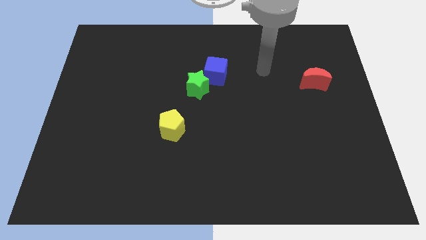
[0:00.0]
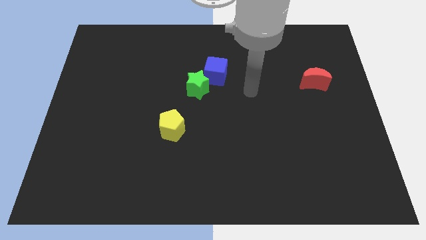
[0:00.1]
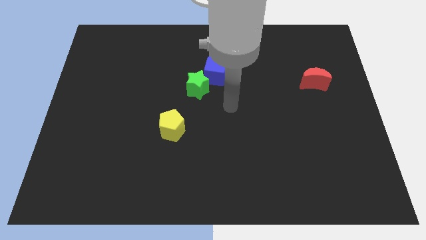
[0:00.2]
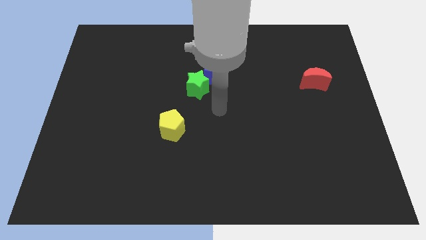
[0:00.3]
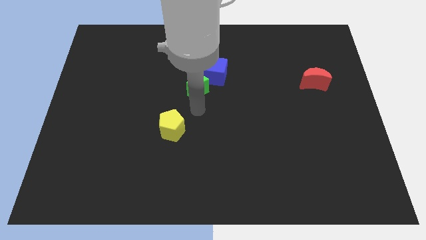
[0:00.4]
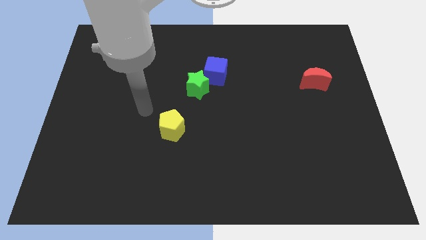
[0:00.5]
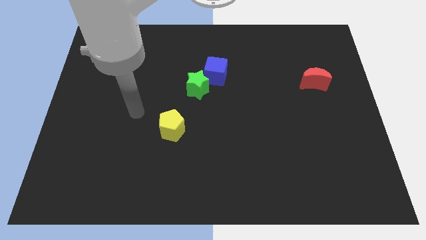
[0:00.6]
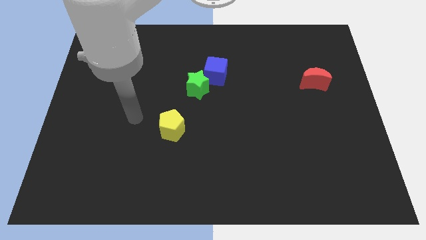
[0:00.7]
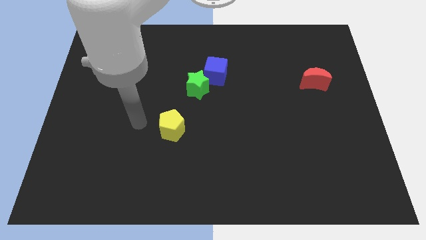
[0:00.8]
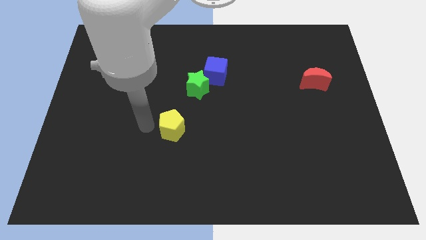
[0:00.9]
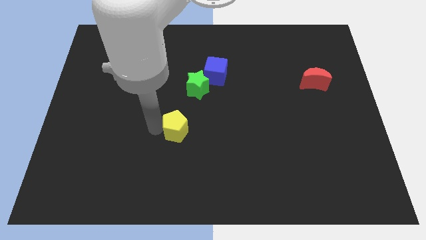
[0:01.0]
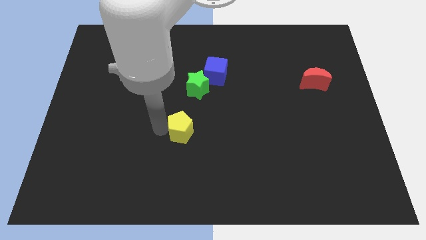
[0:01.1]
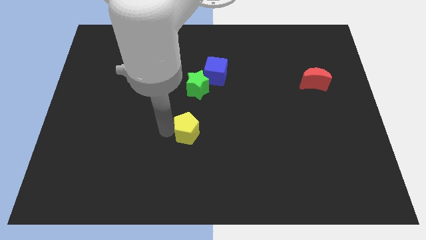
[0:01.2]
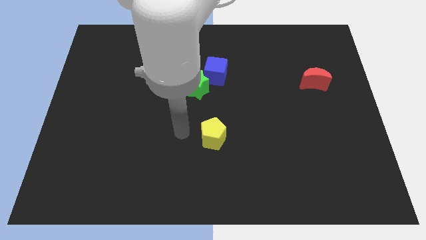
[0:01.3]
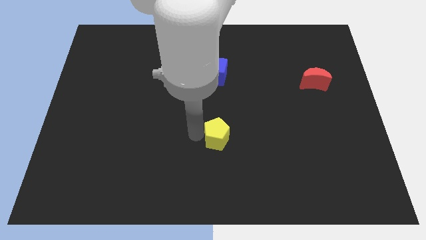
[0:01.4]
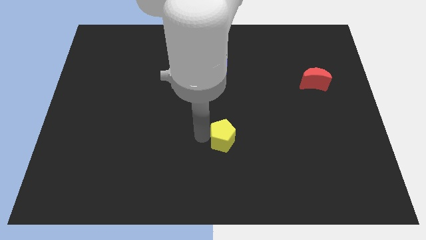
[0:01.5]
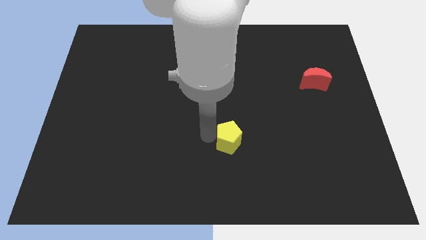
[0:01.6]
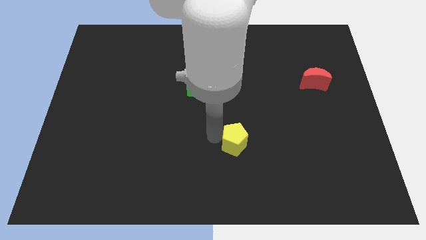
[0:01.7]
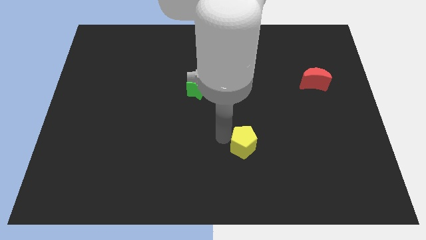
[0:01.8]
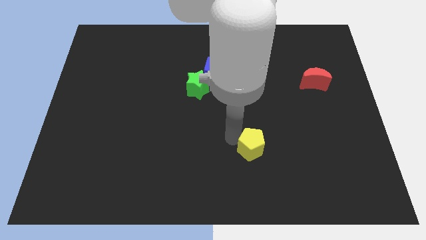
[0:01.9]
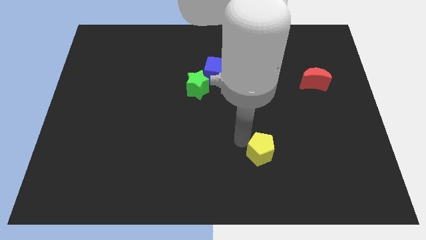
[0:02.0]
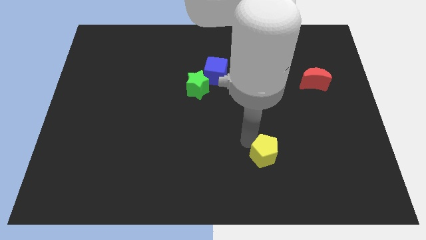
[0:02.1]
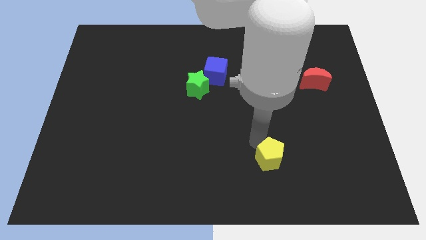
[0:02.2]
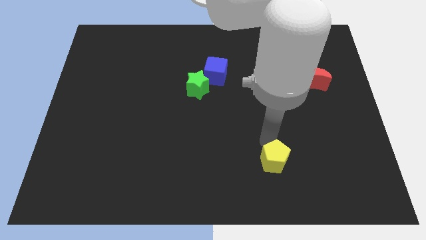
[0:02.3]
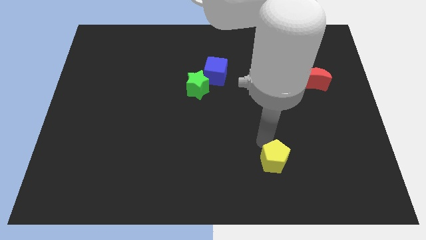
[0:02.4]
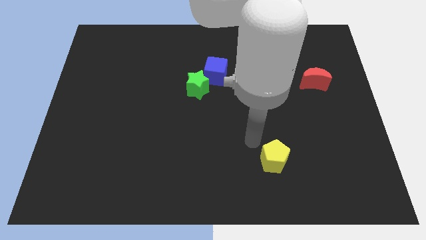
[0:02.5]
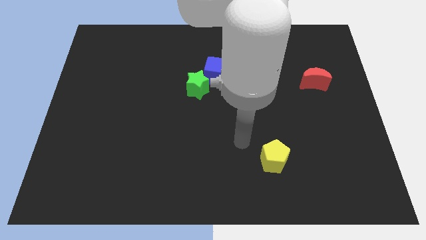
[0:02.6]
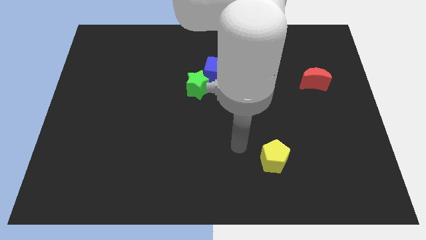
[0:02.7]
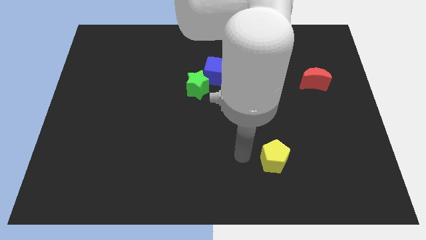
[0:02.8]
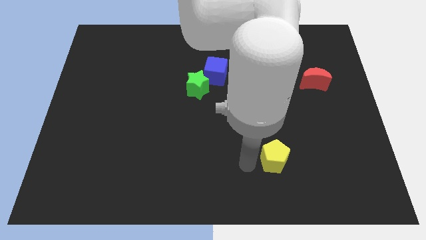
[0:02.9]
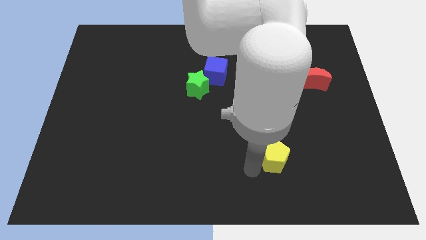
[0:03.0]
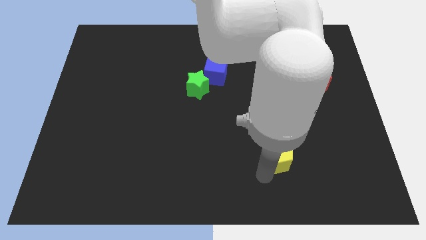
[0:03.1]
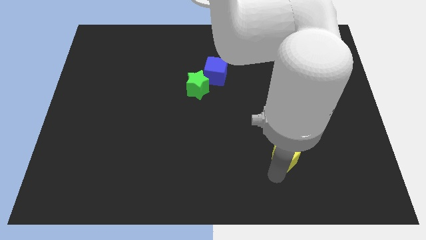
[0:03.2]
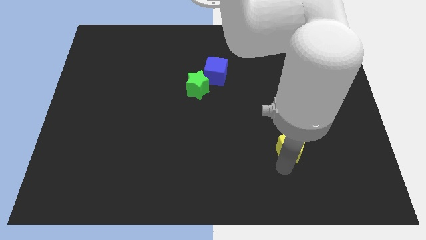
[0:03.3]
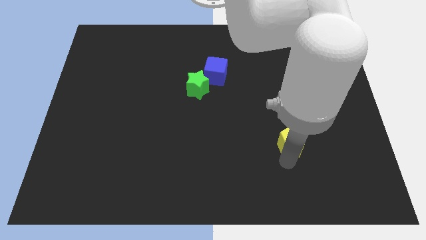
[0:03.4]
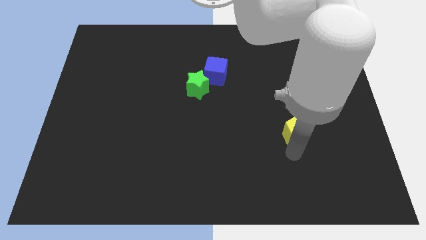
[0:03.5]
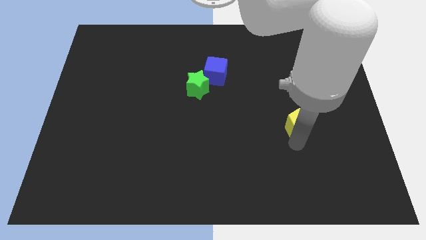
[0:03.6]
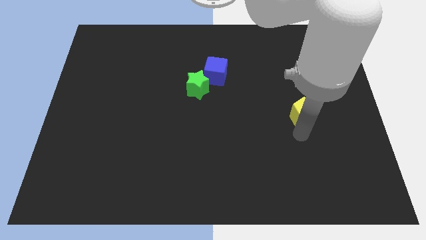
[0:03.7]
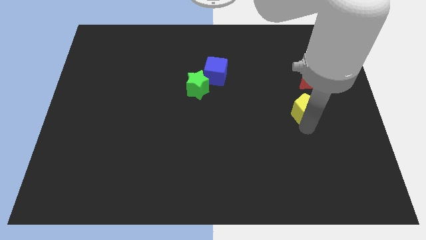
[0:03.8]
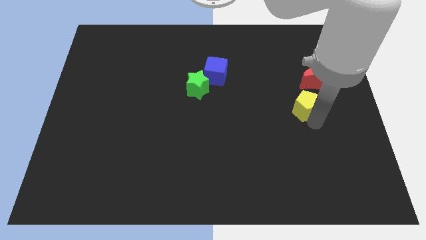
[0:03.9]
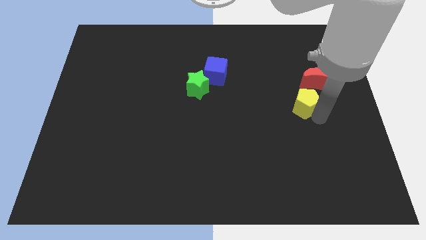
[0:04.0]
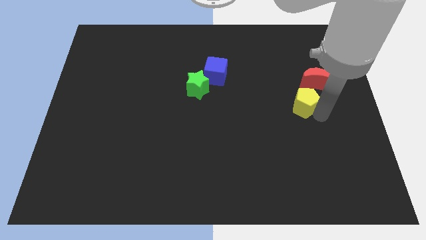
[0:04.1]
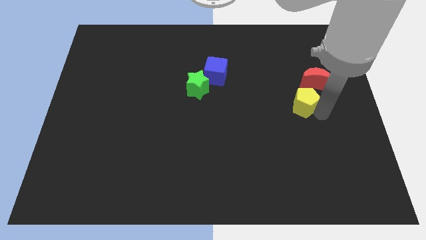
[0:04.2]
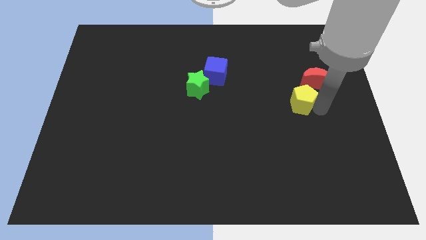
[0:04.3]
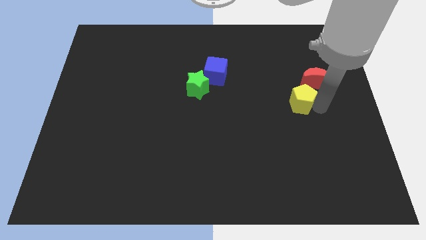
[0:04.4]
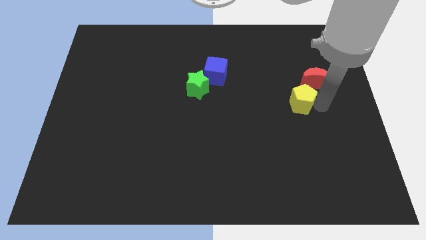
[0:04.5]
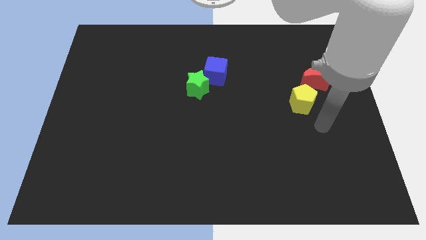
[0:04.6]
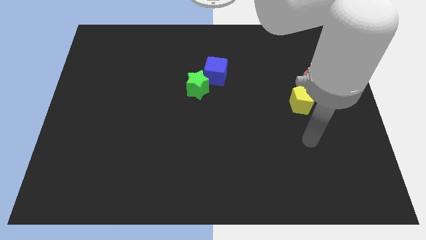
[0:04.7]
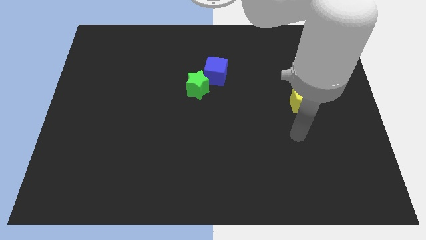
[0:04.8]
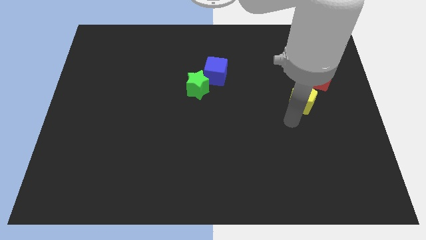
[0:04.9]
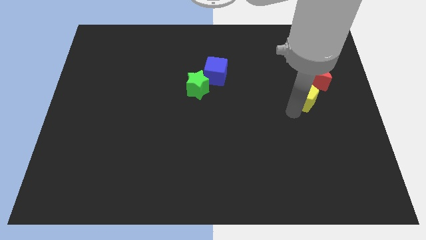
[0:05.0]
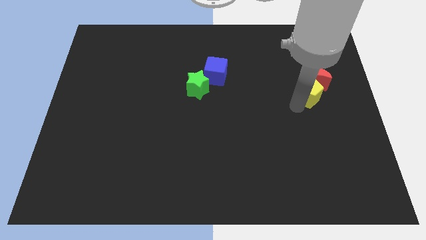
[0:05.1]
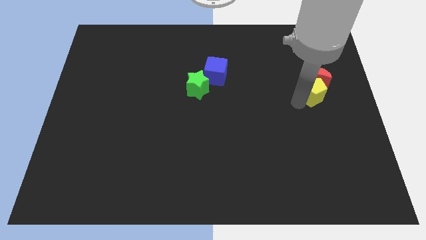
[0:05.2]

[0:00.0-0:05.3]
push the yellow pentagon next to the moon

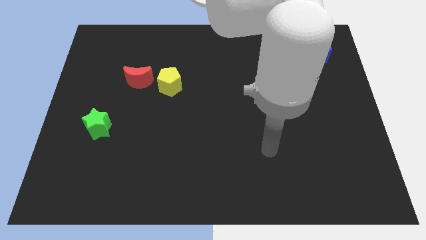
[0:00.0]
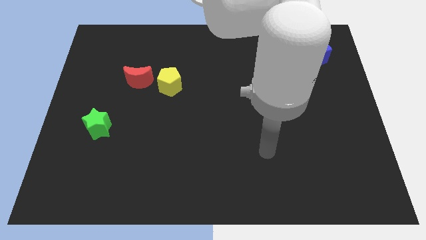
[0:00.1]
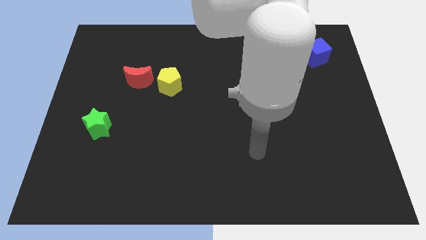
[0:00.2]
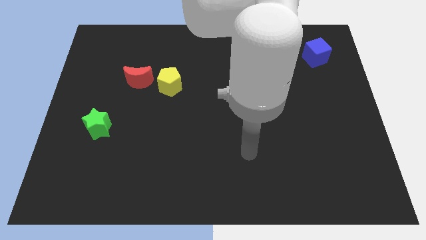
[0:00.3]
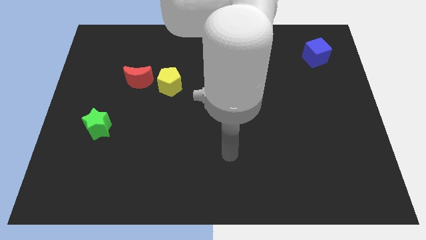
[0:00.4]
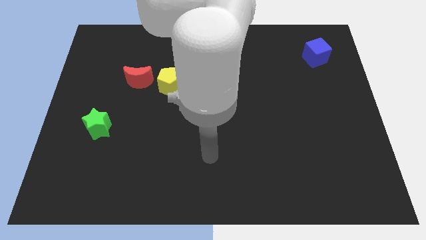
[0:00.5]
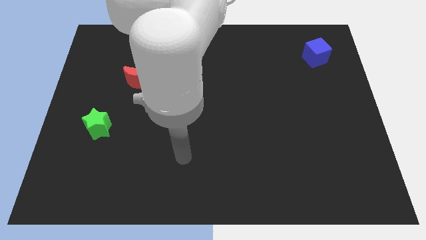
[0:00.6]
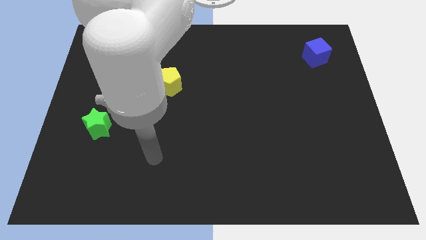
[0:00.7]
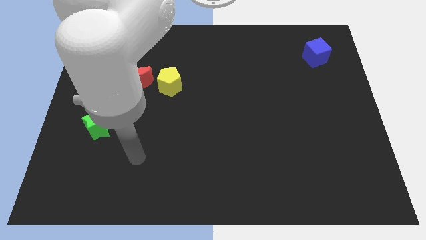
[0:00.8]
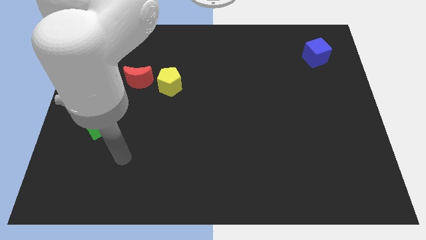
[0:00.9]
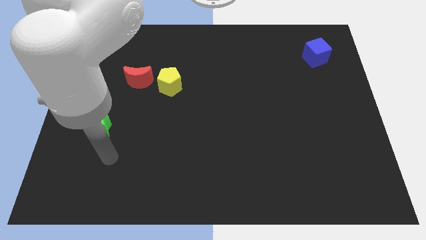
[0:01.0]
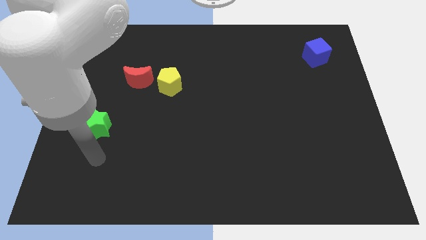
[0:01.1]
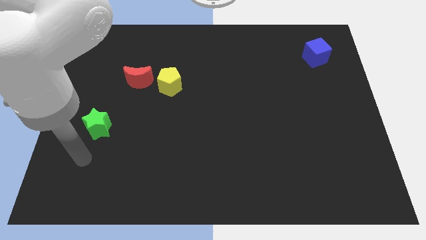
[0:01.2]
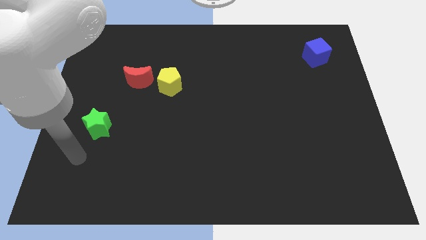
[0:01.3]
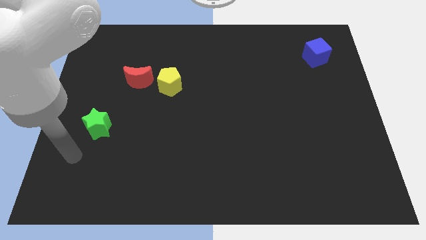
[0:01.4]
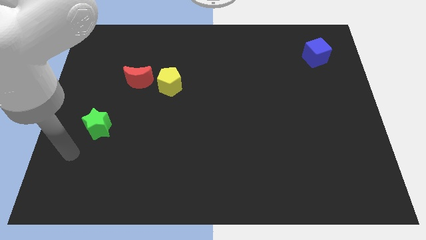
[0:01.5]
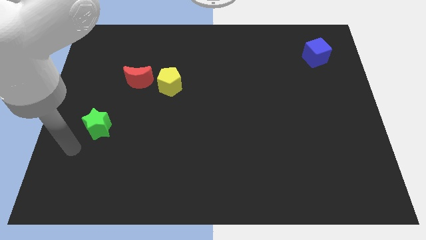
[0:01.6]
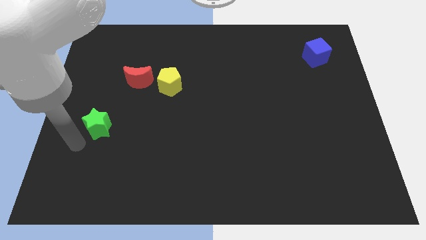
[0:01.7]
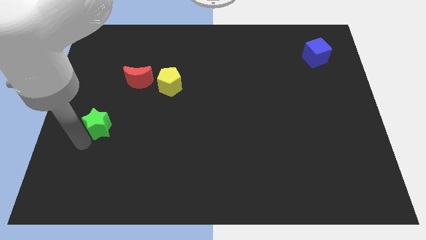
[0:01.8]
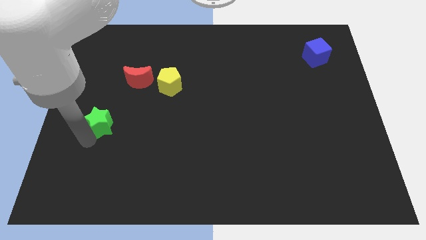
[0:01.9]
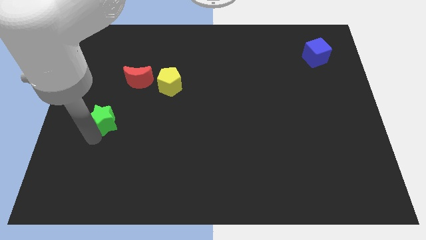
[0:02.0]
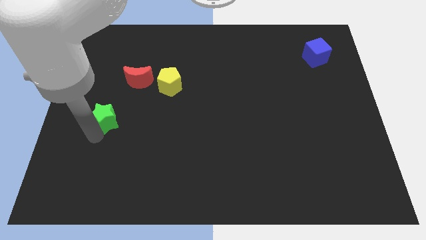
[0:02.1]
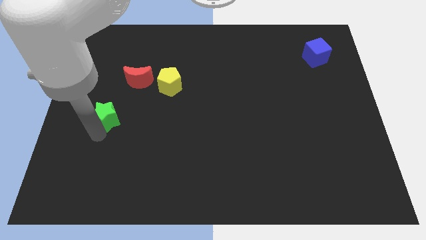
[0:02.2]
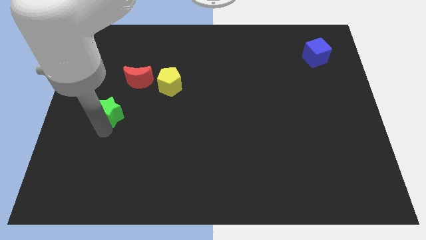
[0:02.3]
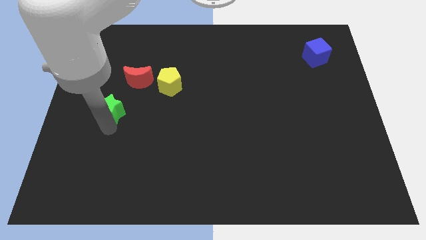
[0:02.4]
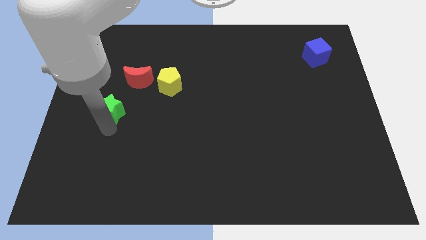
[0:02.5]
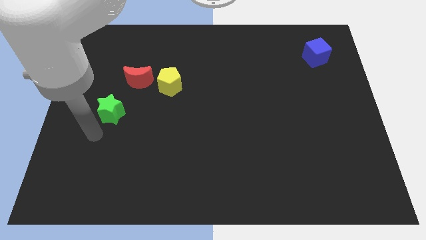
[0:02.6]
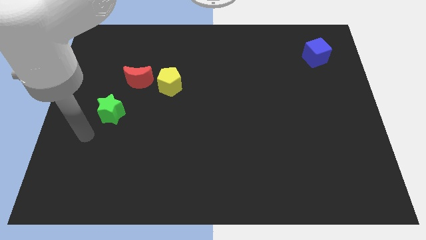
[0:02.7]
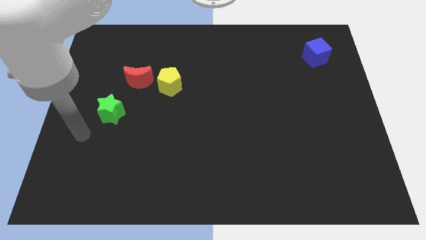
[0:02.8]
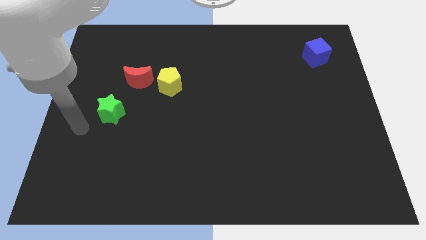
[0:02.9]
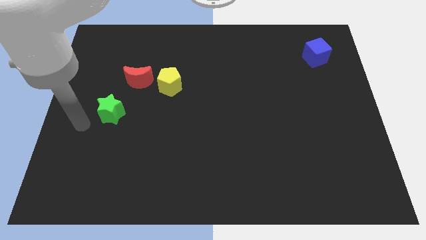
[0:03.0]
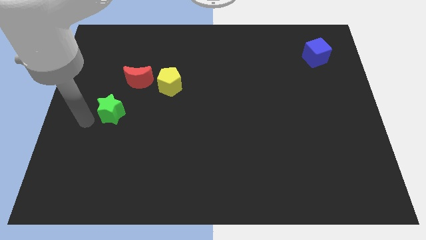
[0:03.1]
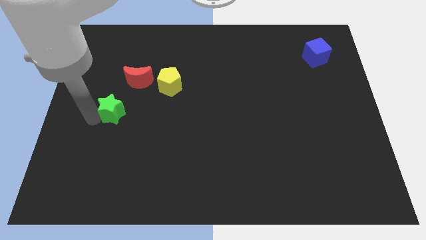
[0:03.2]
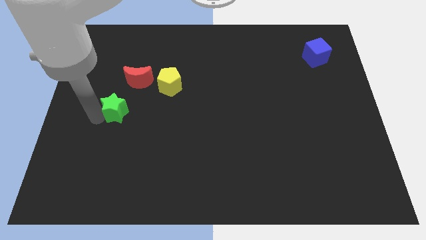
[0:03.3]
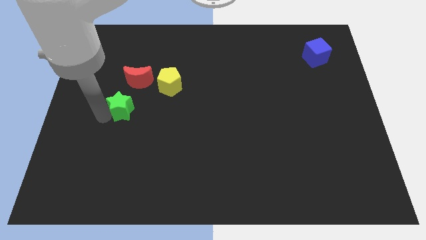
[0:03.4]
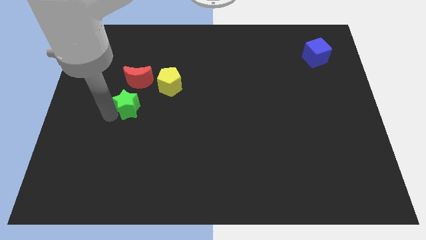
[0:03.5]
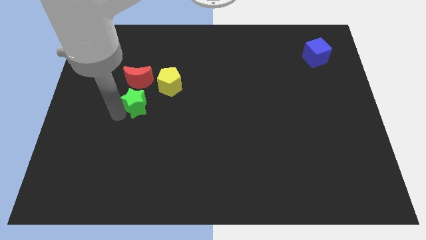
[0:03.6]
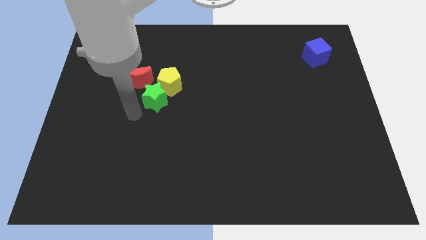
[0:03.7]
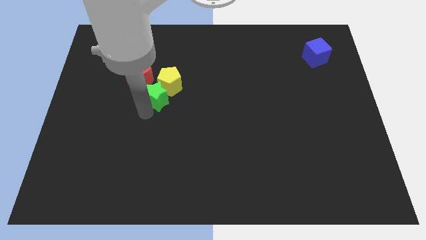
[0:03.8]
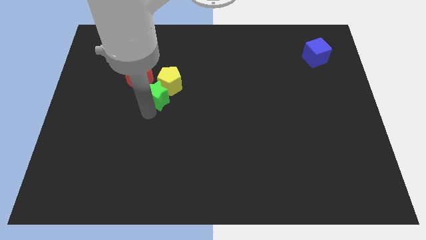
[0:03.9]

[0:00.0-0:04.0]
move the green block to the yellow pentagon
